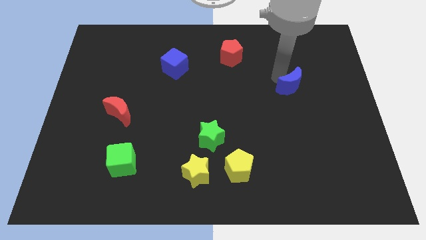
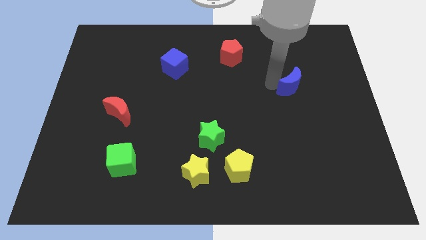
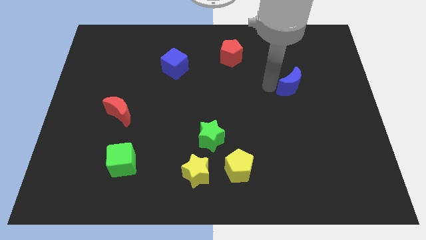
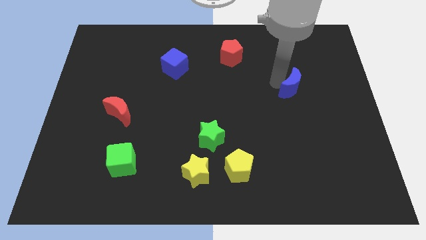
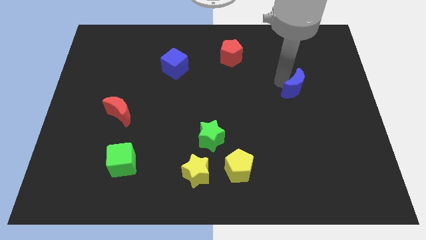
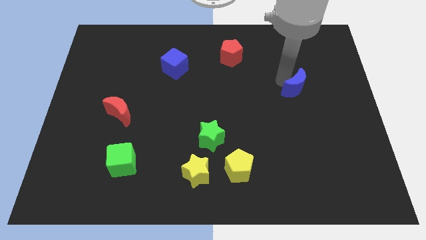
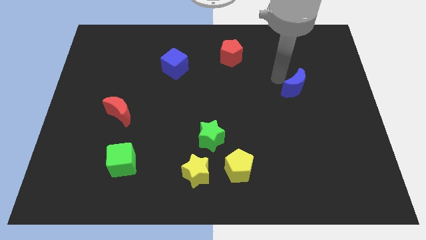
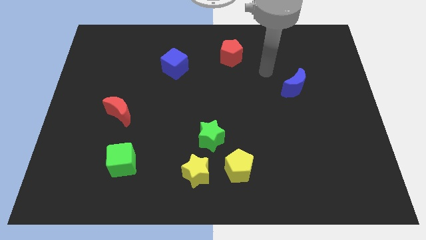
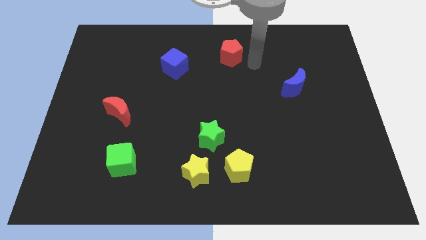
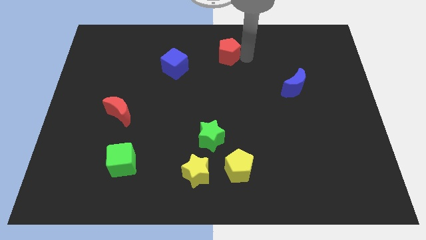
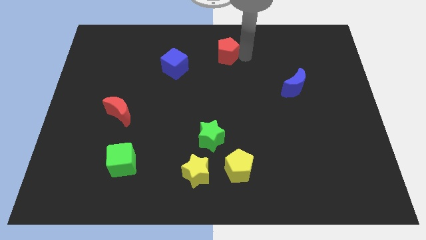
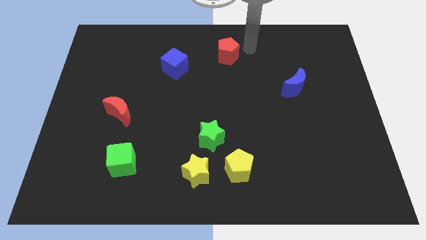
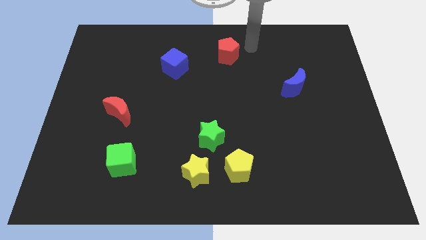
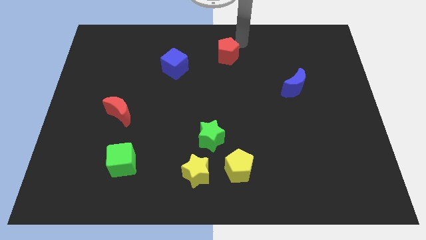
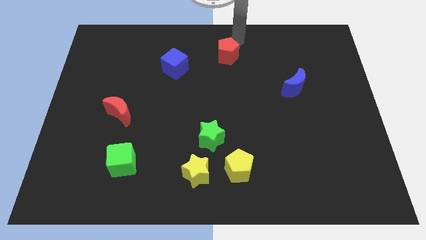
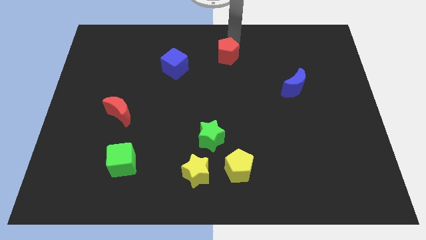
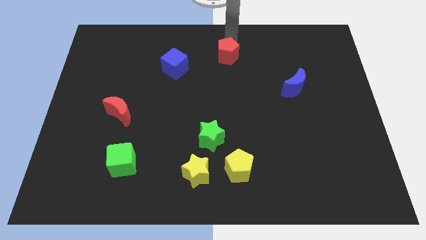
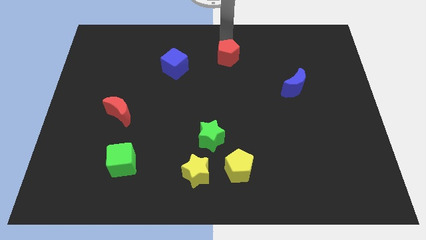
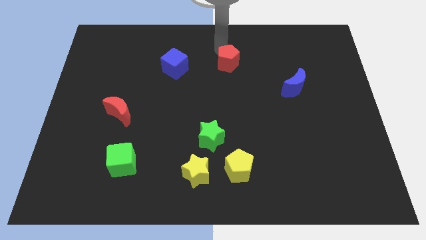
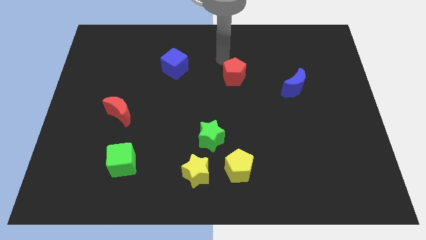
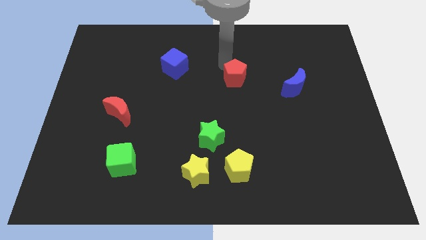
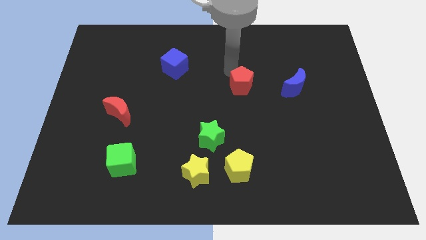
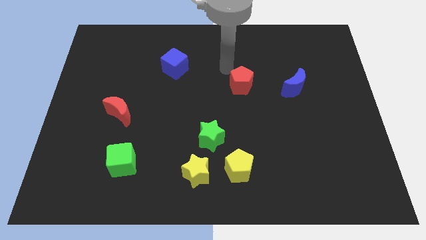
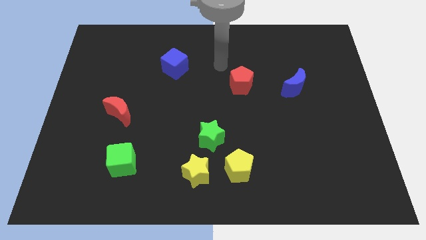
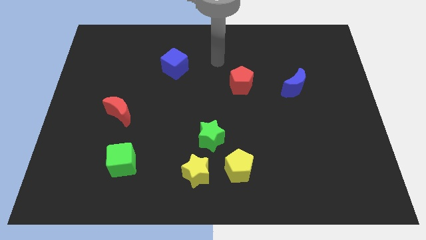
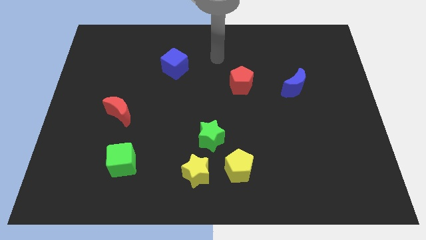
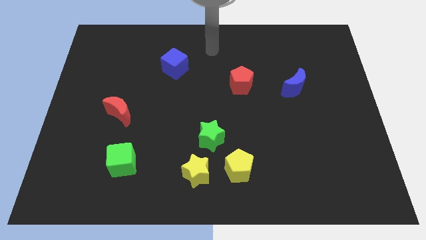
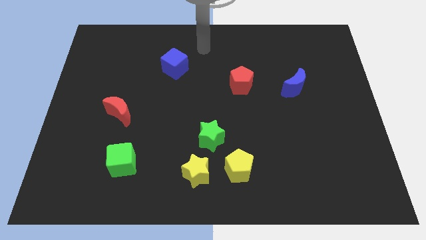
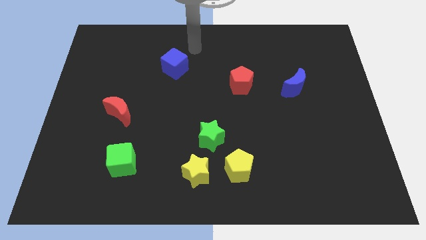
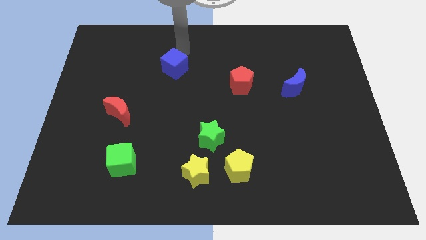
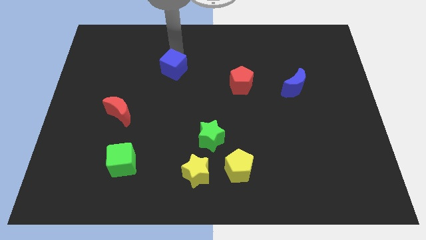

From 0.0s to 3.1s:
push the red pentagon to the left side of the blue crescent

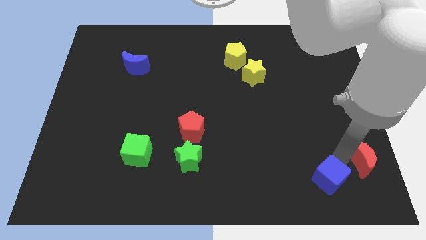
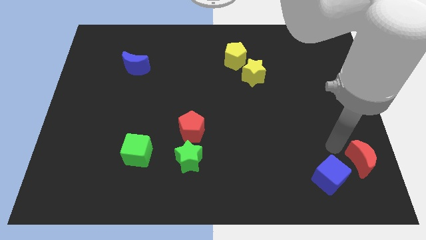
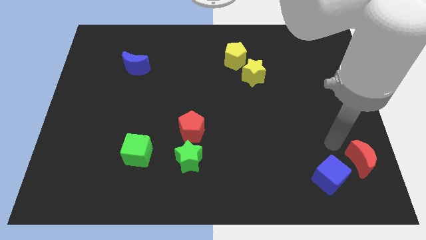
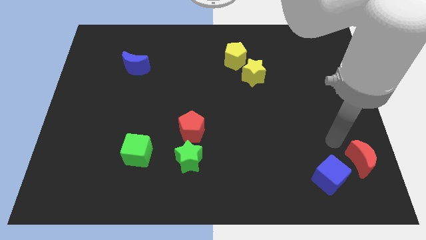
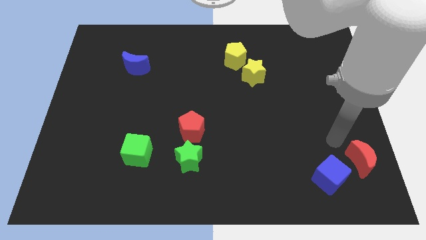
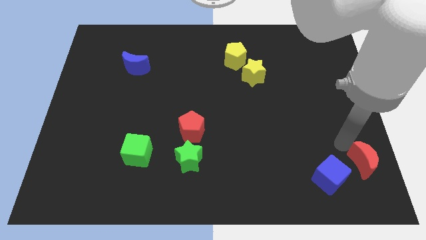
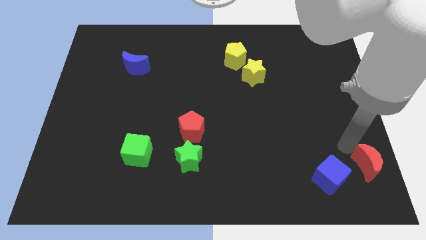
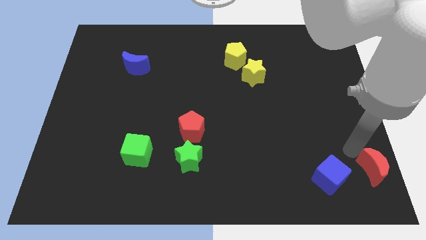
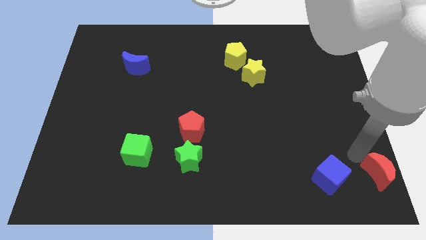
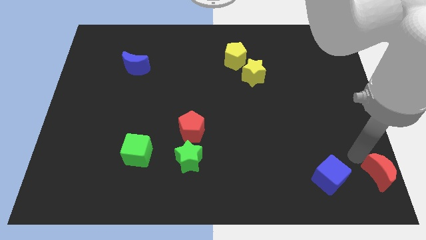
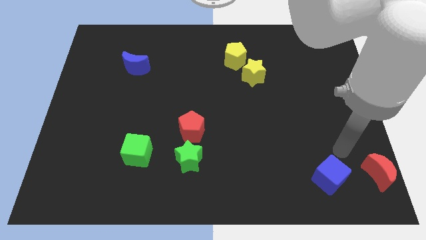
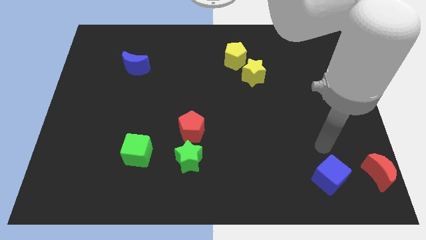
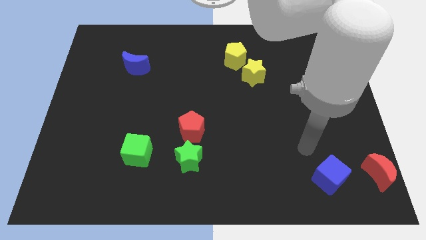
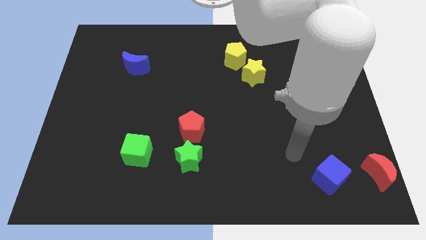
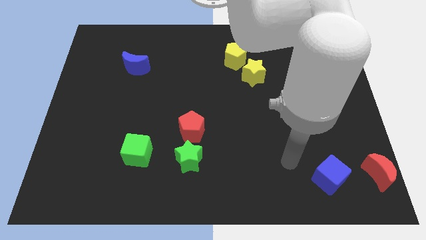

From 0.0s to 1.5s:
place the red moon at the right side of the blue cube

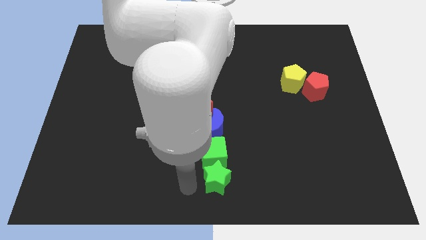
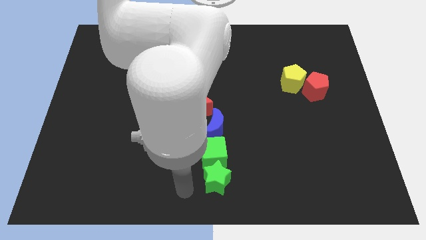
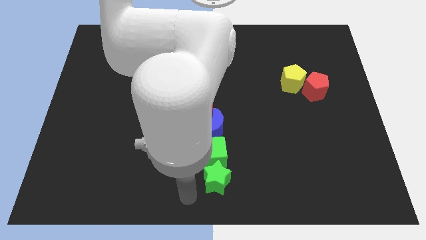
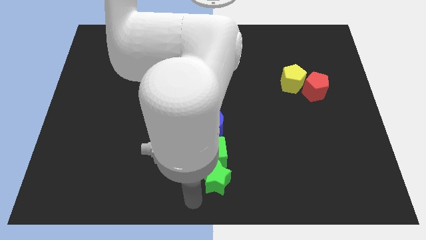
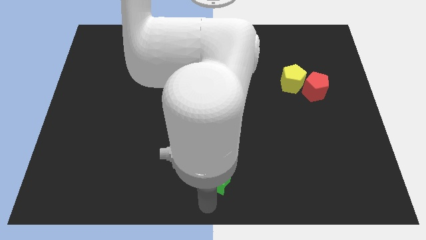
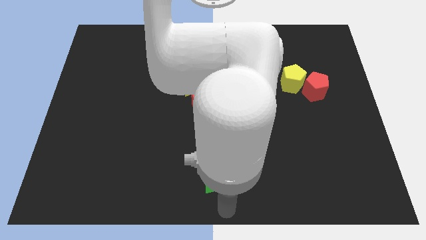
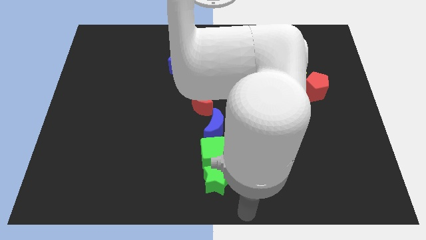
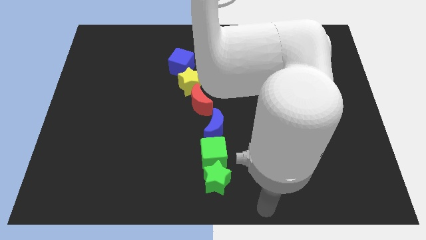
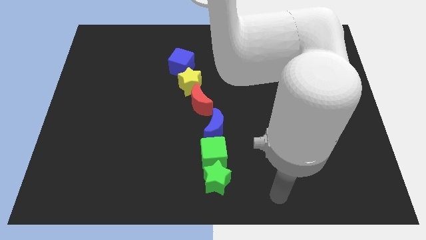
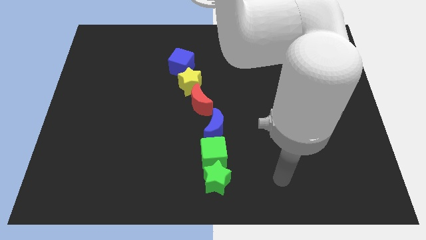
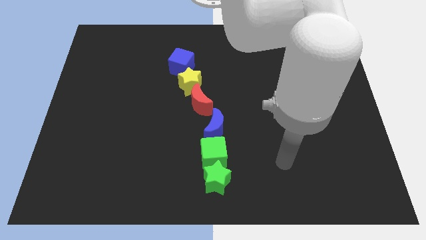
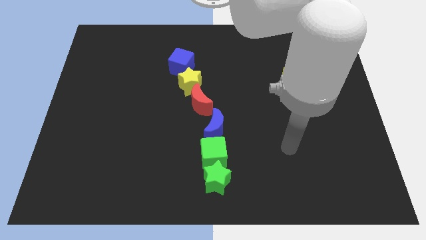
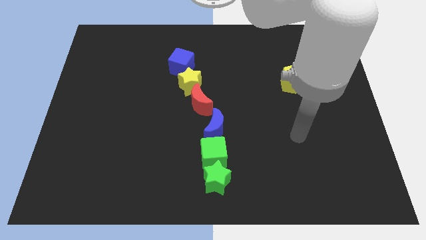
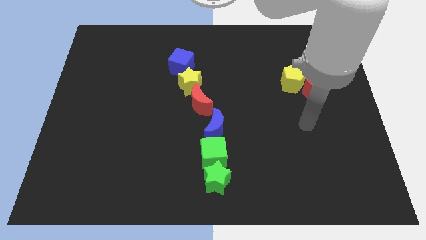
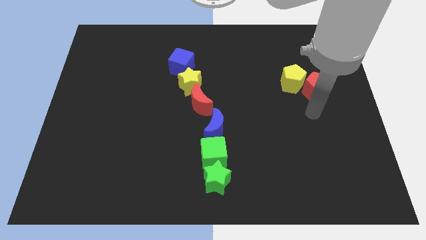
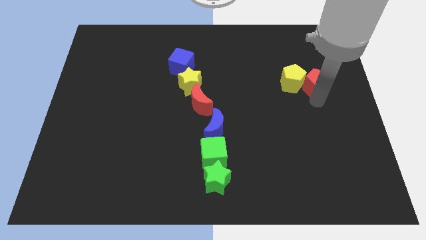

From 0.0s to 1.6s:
move your hand towards the red pentagon

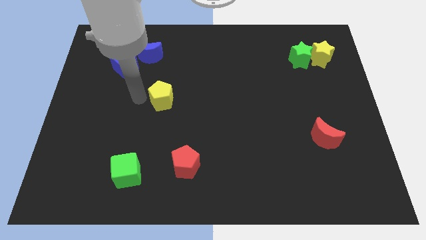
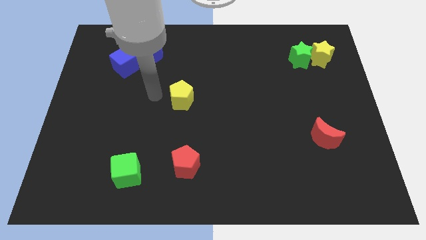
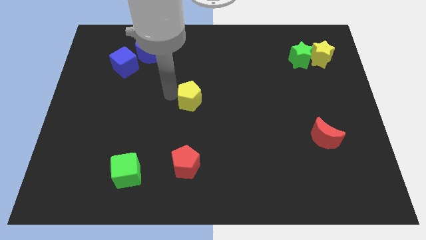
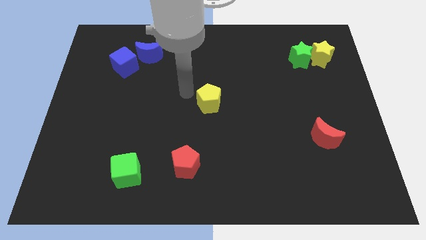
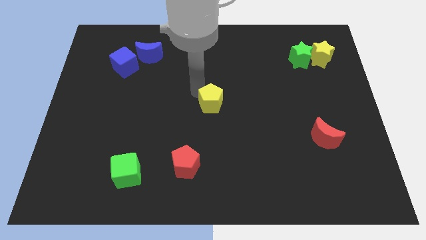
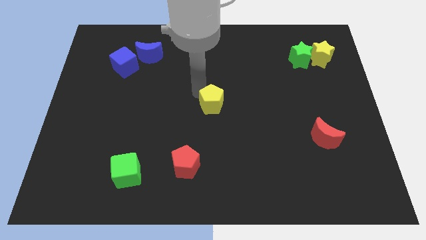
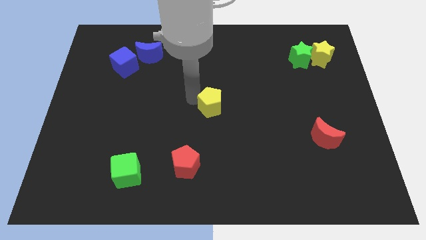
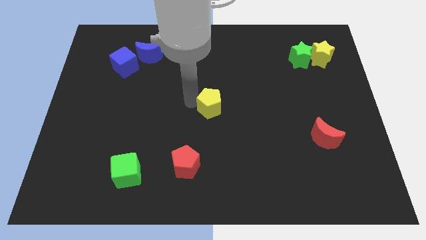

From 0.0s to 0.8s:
place yellow pentagon at center

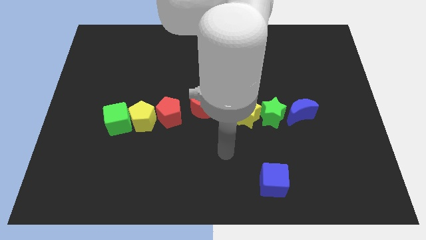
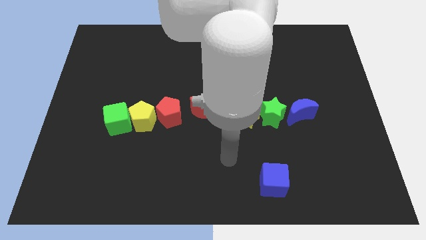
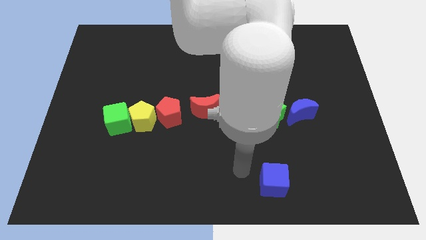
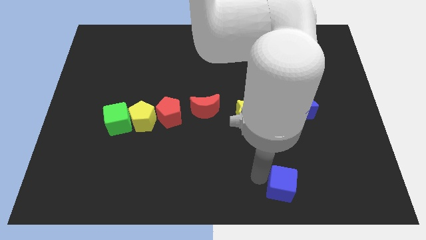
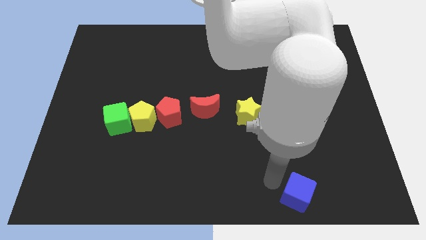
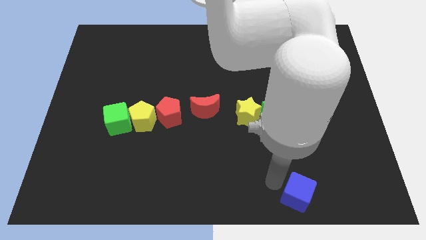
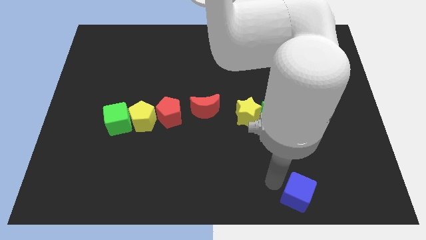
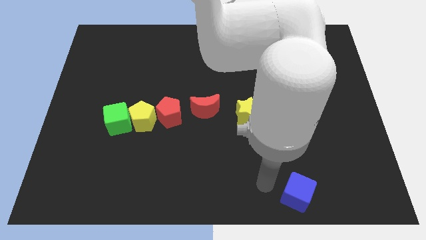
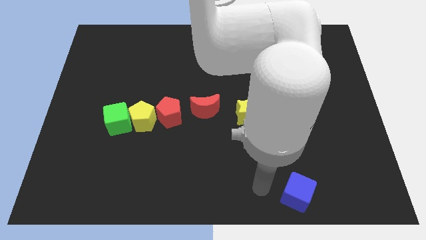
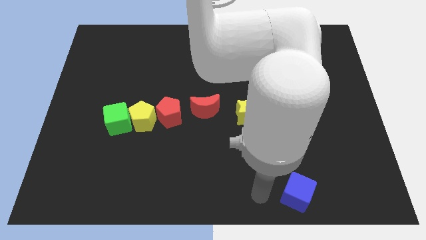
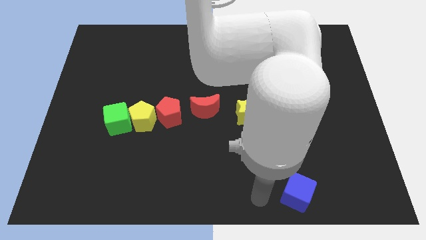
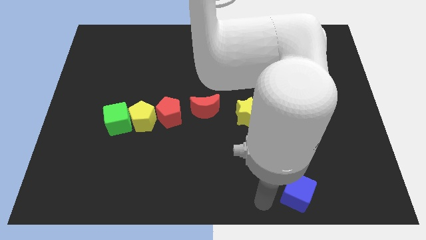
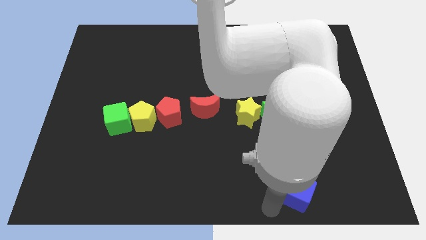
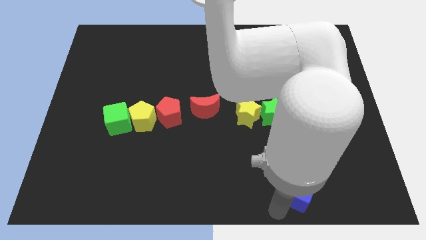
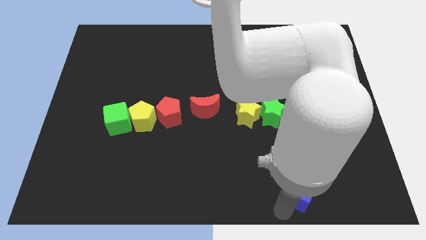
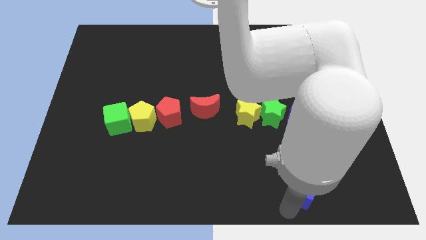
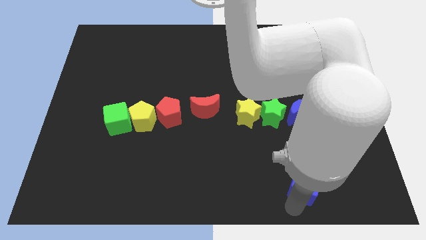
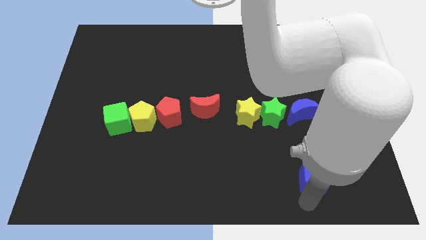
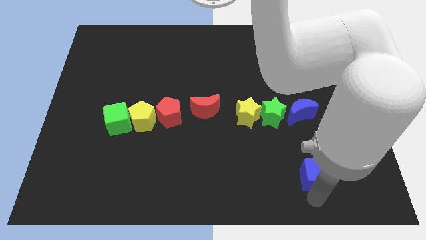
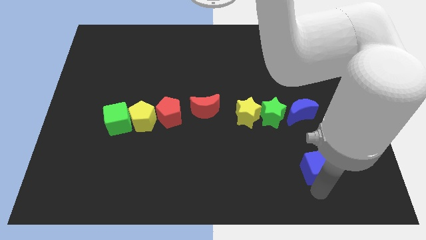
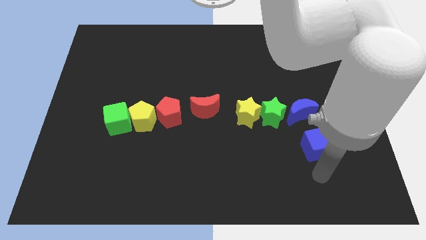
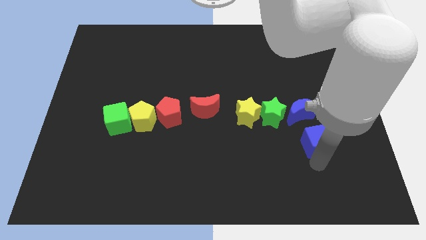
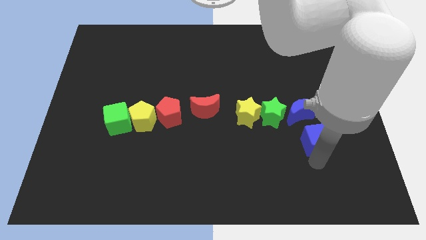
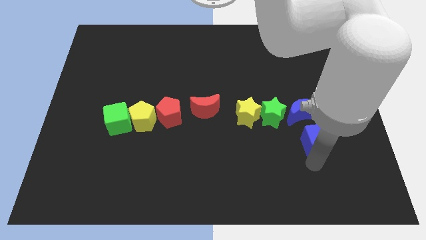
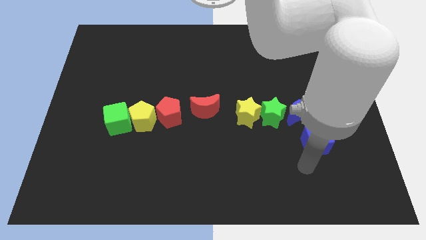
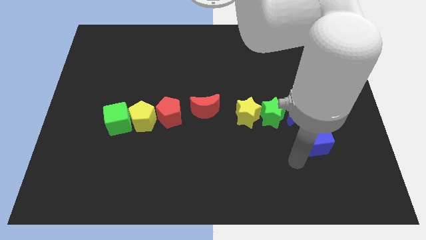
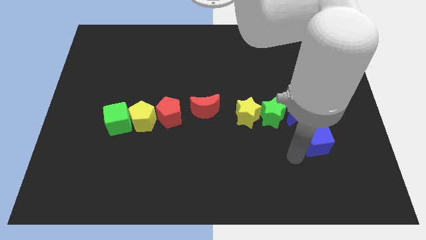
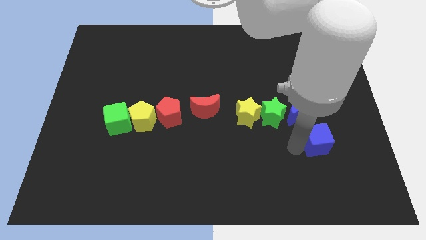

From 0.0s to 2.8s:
push the blue cube to the bottom side of the blue moon
